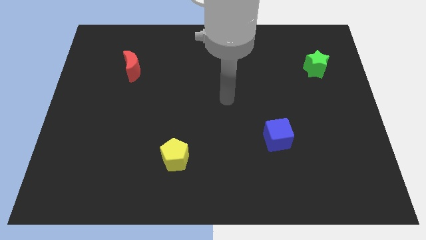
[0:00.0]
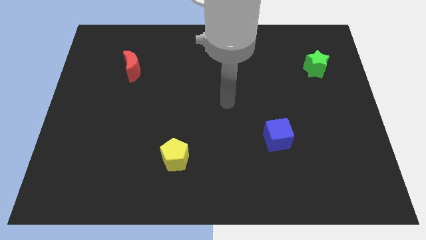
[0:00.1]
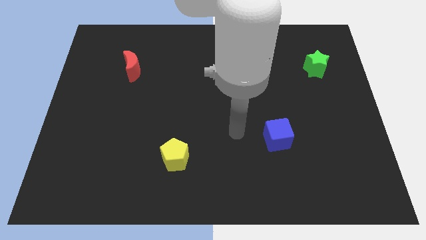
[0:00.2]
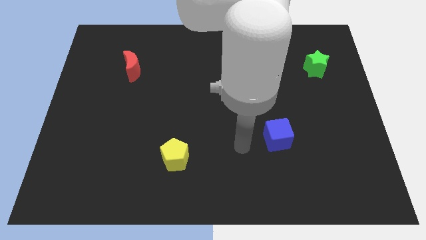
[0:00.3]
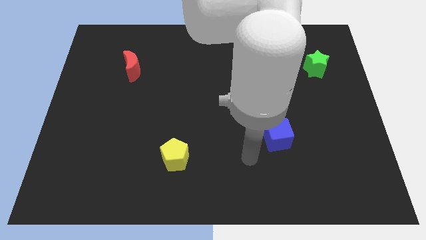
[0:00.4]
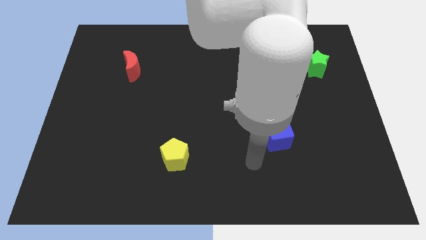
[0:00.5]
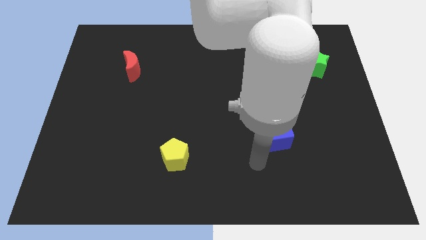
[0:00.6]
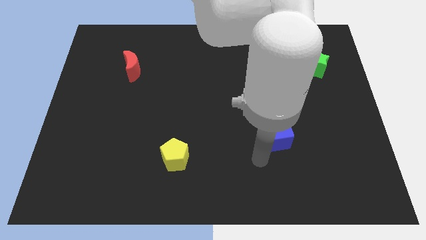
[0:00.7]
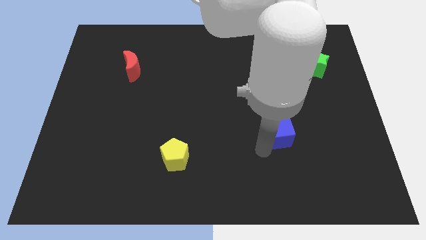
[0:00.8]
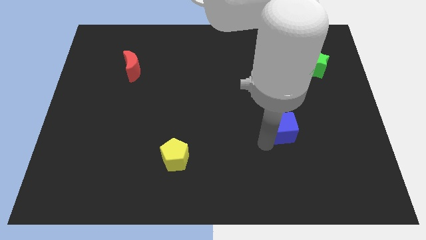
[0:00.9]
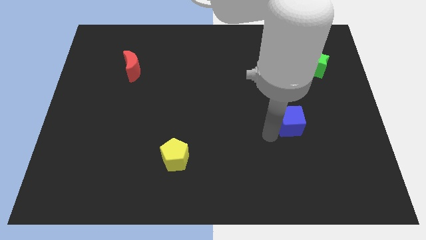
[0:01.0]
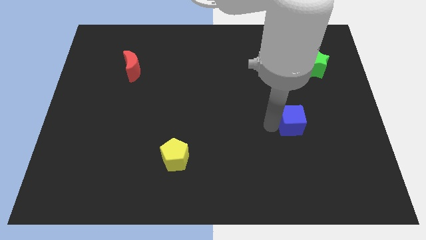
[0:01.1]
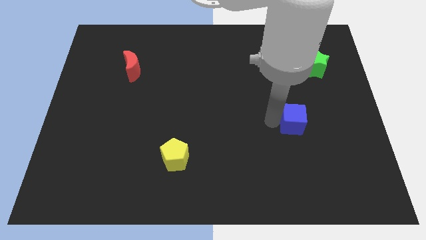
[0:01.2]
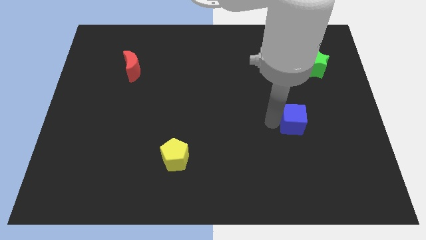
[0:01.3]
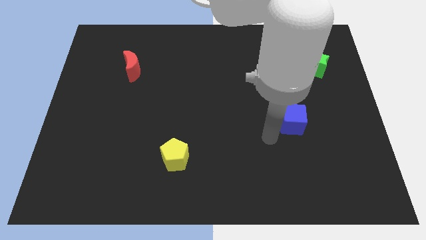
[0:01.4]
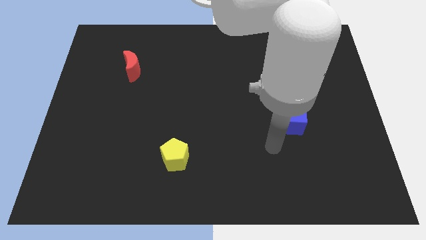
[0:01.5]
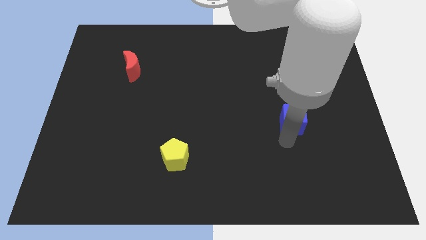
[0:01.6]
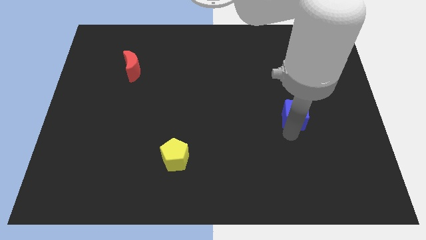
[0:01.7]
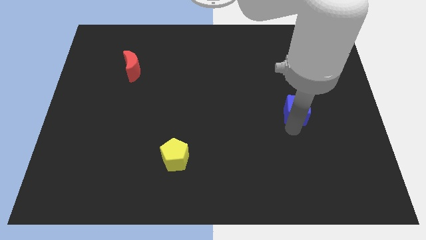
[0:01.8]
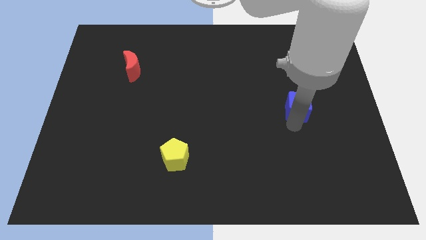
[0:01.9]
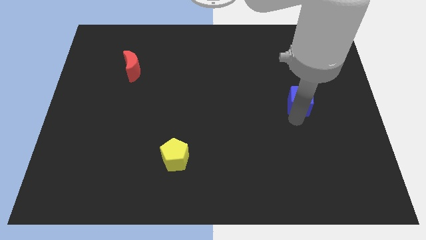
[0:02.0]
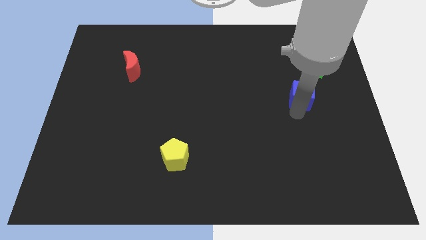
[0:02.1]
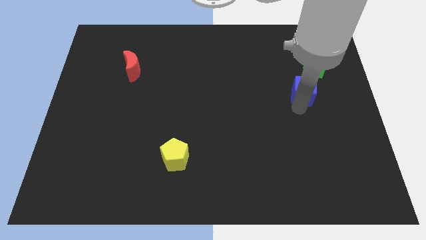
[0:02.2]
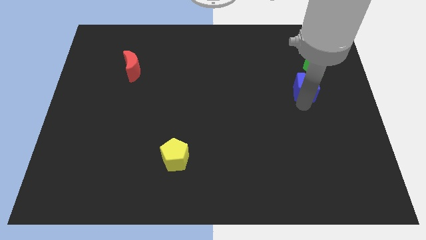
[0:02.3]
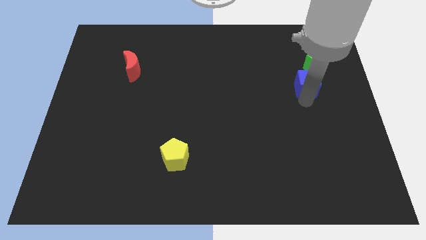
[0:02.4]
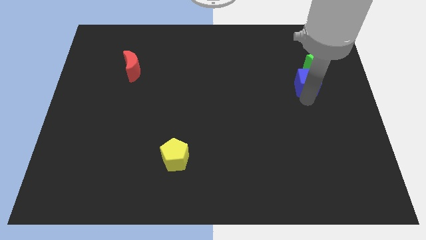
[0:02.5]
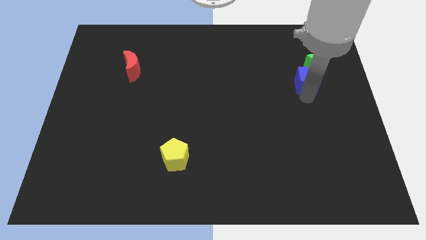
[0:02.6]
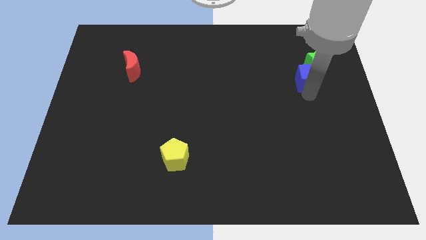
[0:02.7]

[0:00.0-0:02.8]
push the cube next to the green block

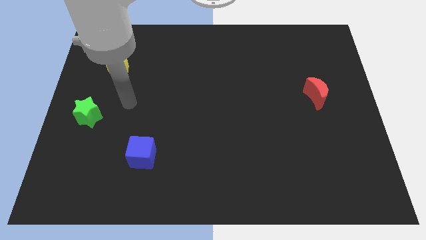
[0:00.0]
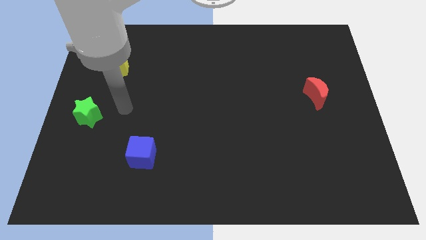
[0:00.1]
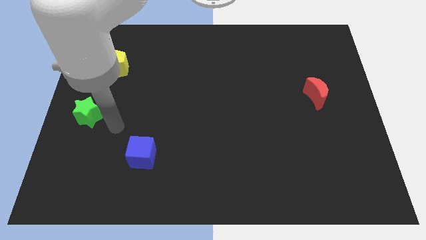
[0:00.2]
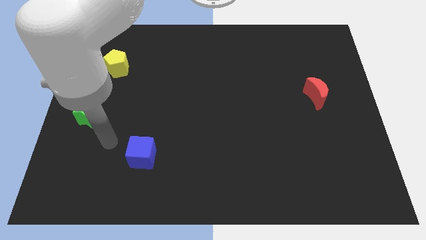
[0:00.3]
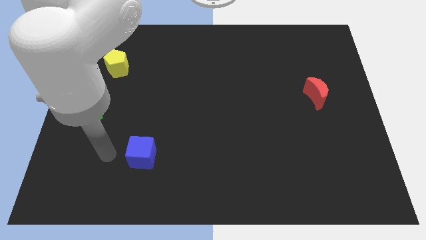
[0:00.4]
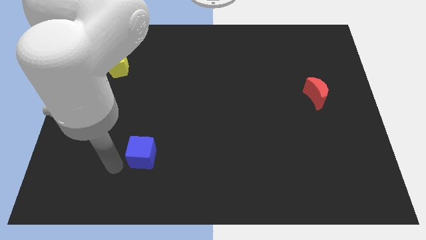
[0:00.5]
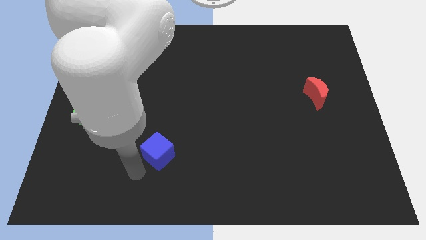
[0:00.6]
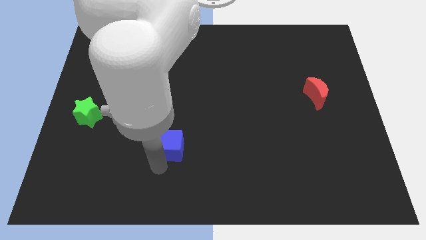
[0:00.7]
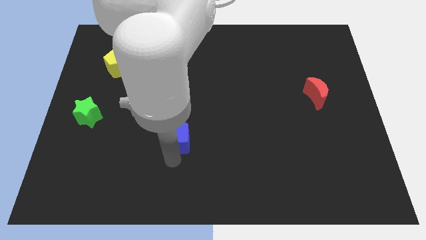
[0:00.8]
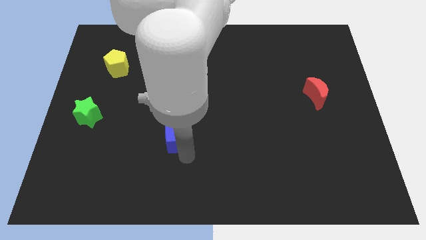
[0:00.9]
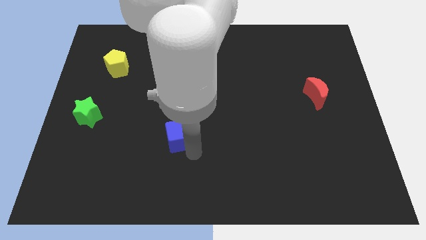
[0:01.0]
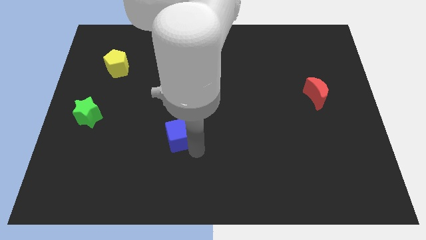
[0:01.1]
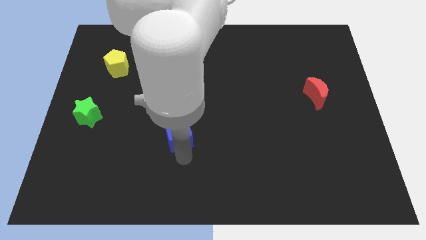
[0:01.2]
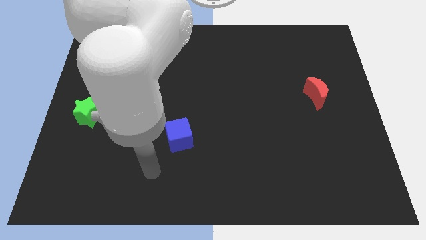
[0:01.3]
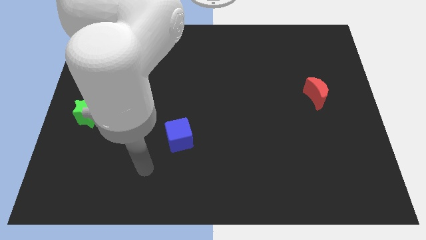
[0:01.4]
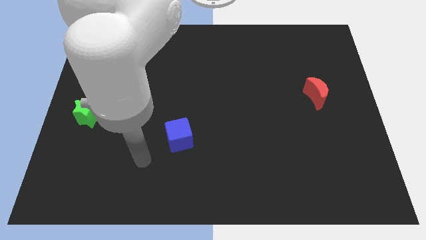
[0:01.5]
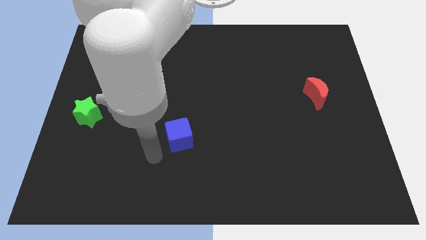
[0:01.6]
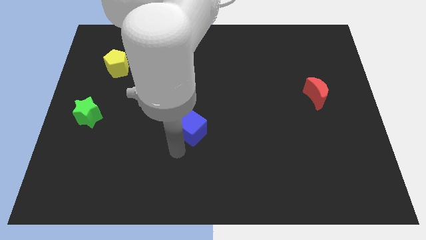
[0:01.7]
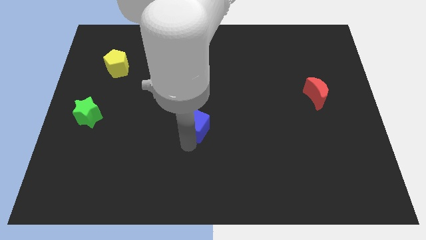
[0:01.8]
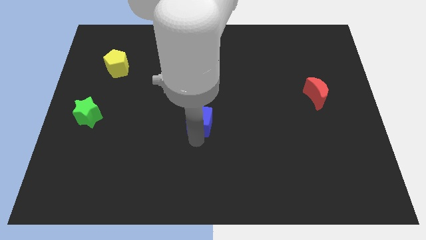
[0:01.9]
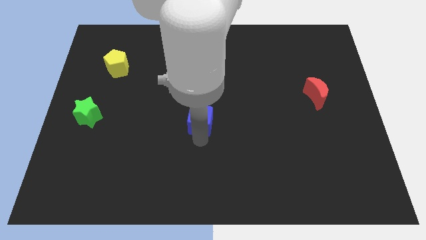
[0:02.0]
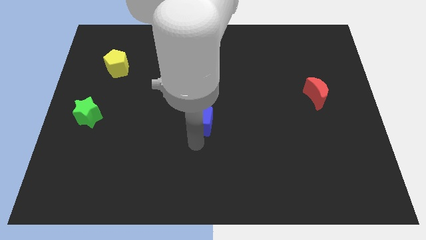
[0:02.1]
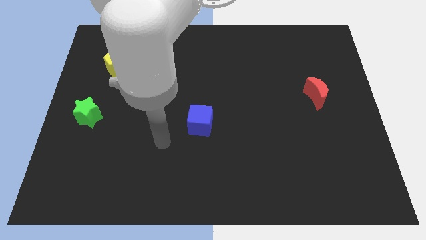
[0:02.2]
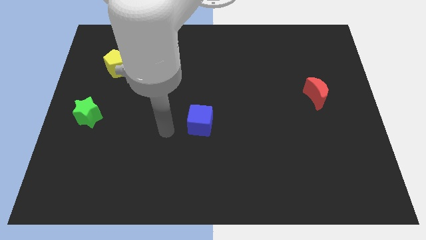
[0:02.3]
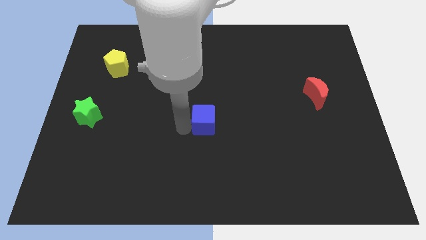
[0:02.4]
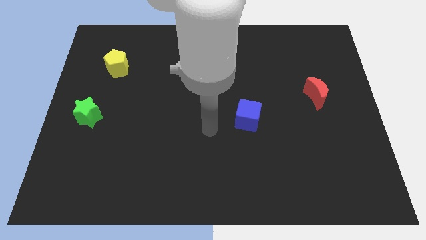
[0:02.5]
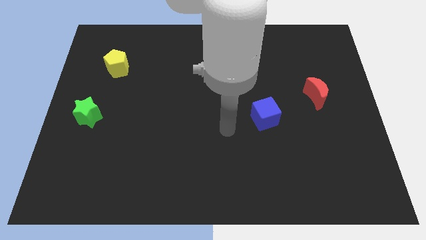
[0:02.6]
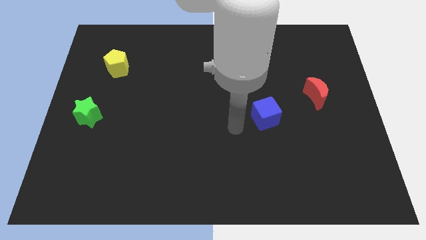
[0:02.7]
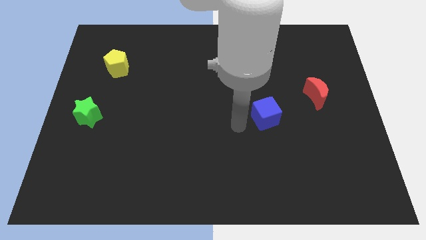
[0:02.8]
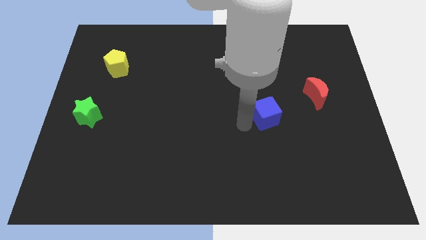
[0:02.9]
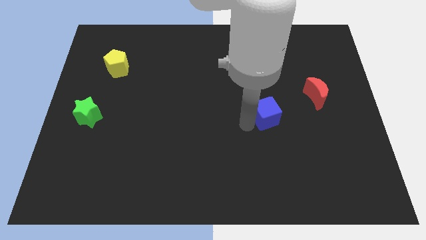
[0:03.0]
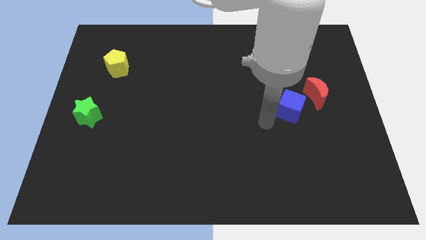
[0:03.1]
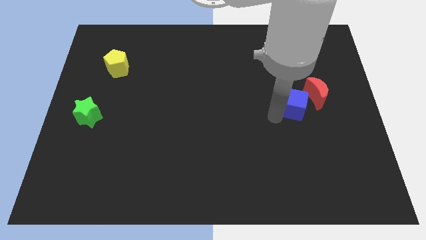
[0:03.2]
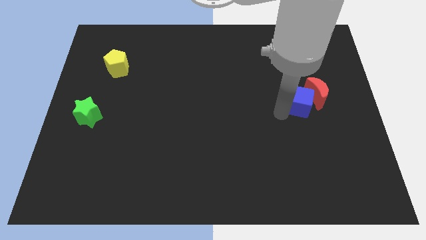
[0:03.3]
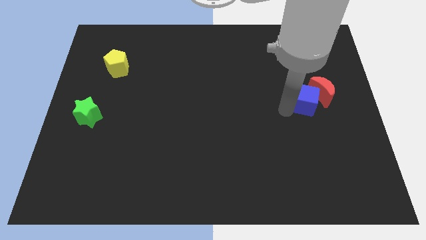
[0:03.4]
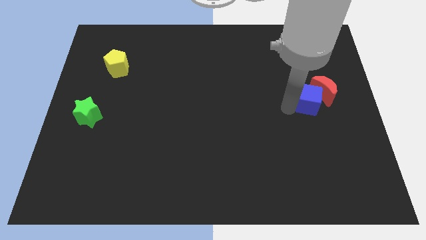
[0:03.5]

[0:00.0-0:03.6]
slide the blue block close to the red moon

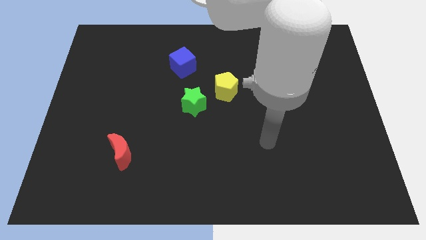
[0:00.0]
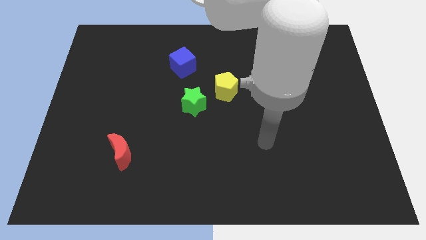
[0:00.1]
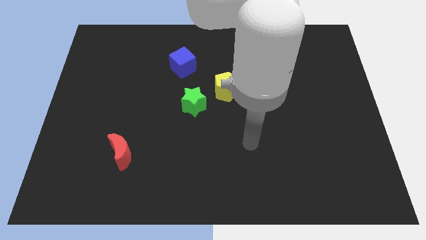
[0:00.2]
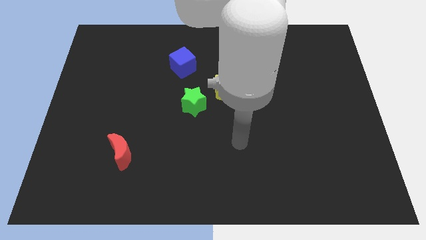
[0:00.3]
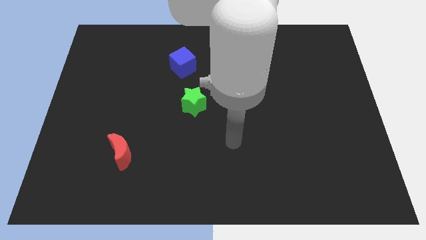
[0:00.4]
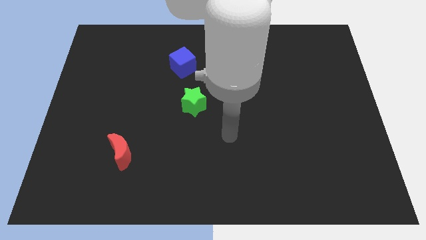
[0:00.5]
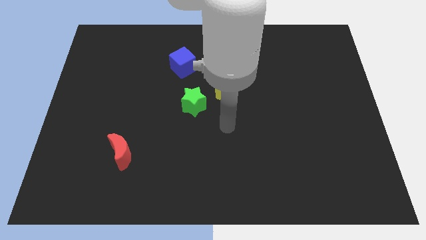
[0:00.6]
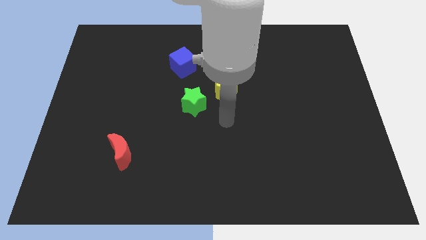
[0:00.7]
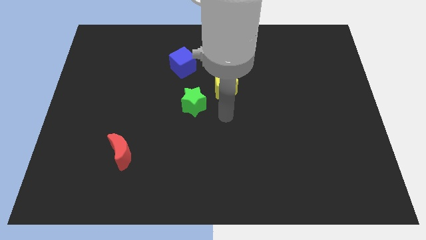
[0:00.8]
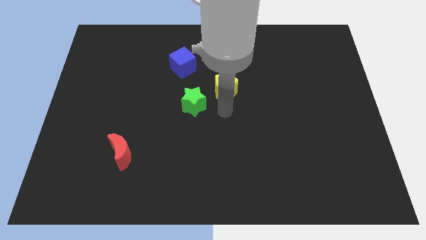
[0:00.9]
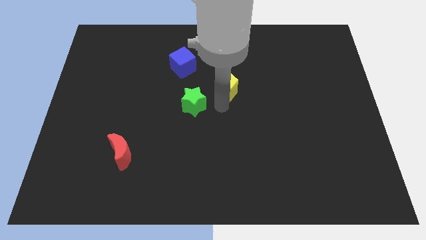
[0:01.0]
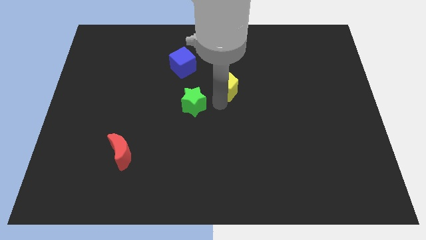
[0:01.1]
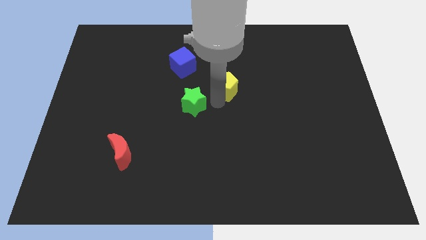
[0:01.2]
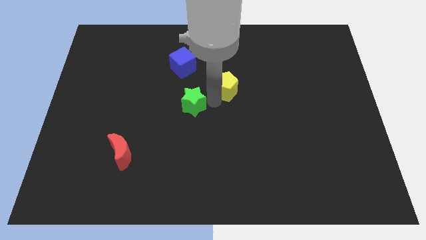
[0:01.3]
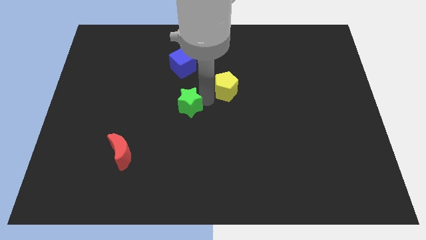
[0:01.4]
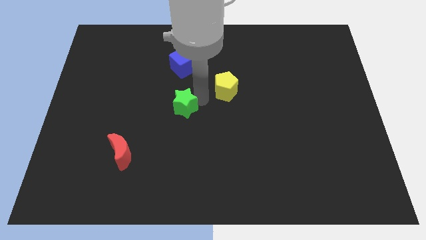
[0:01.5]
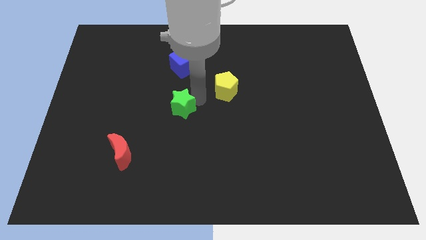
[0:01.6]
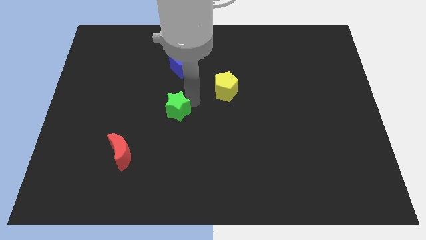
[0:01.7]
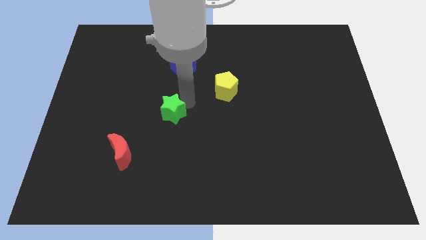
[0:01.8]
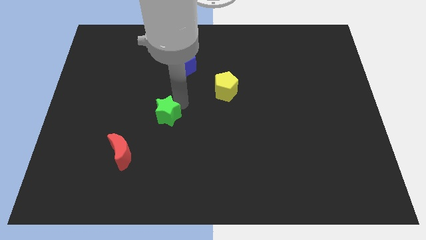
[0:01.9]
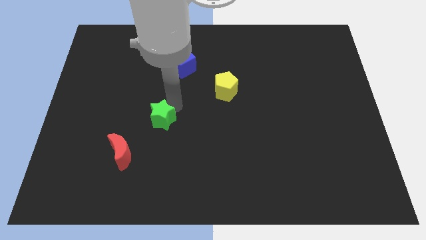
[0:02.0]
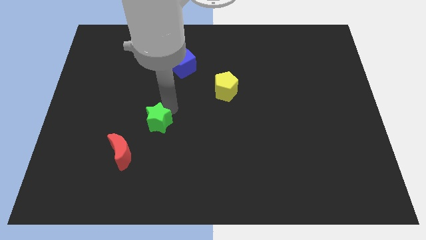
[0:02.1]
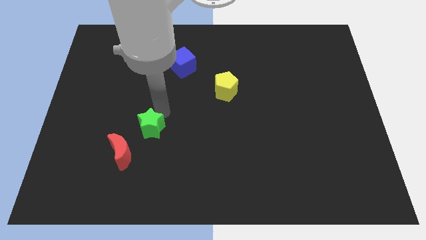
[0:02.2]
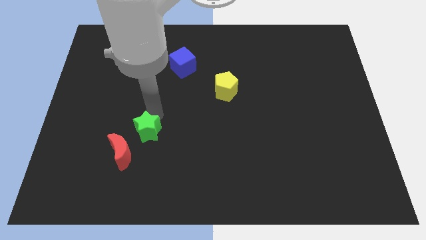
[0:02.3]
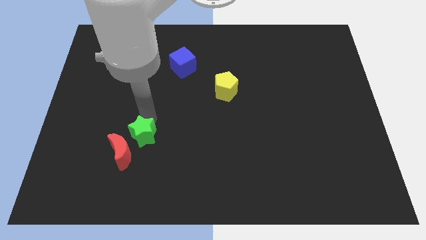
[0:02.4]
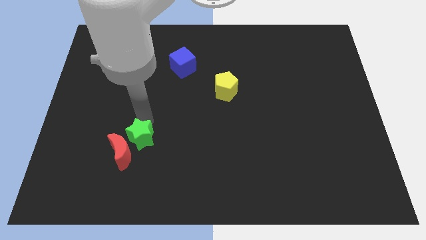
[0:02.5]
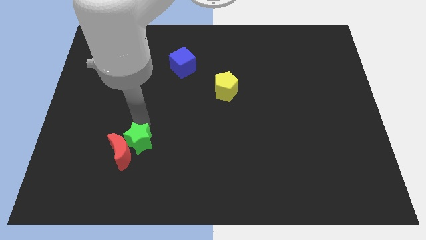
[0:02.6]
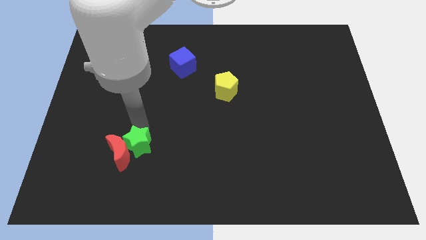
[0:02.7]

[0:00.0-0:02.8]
put the star to the moon
